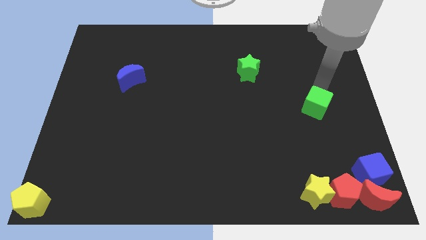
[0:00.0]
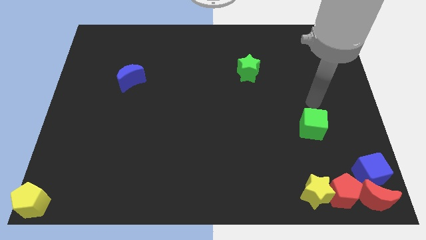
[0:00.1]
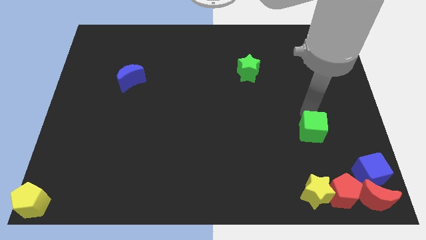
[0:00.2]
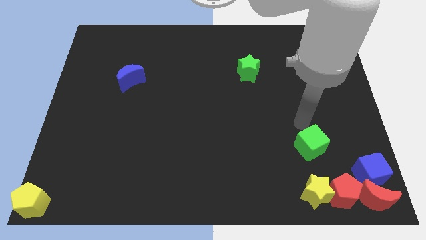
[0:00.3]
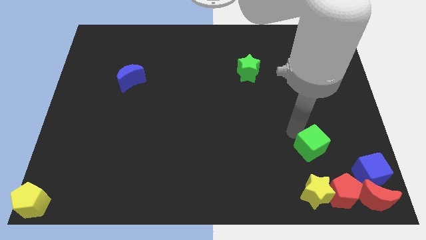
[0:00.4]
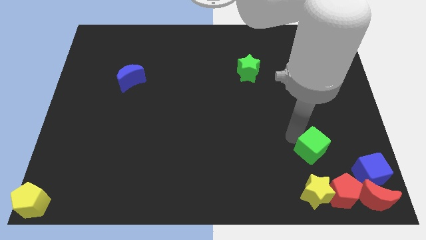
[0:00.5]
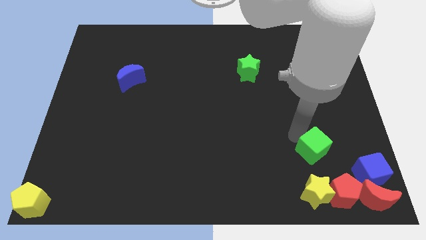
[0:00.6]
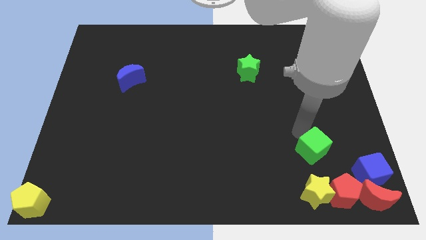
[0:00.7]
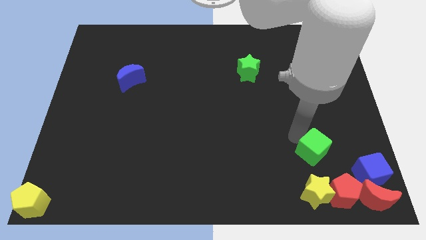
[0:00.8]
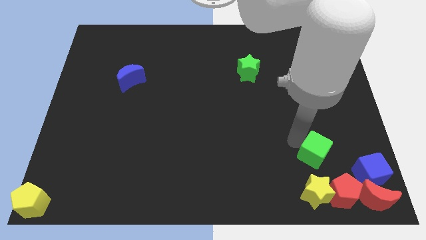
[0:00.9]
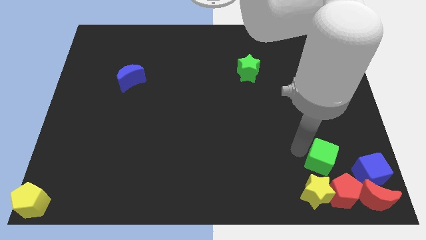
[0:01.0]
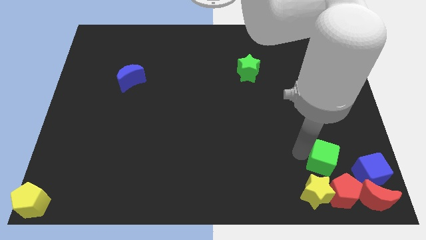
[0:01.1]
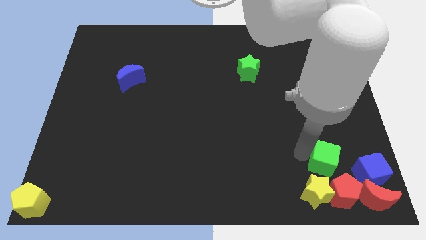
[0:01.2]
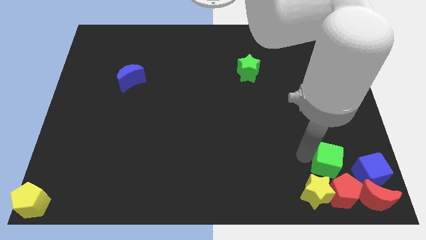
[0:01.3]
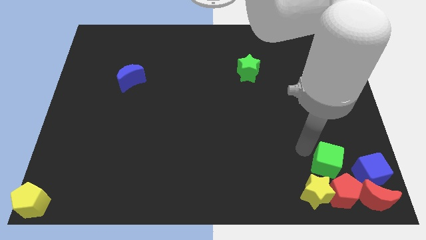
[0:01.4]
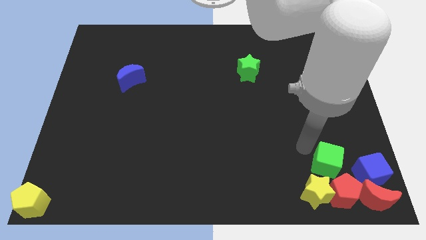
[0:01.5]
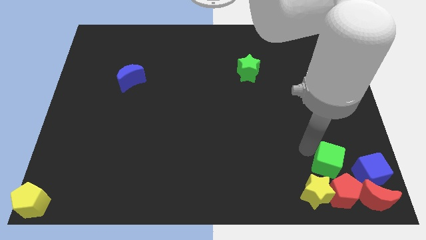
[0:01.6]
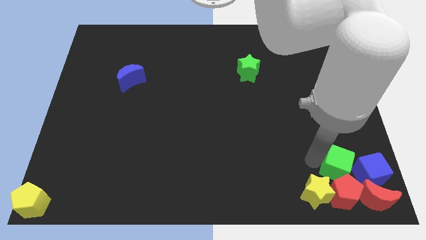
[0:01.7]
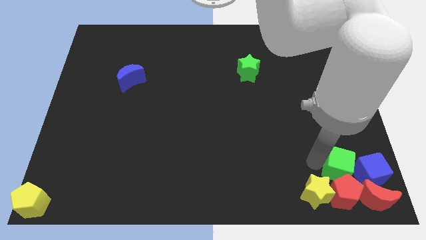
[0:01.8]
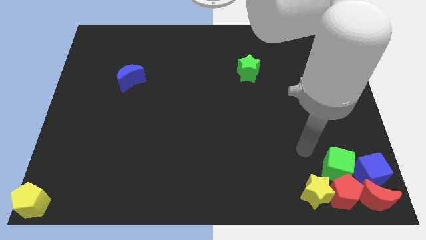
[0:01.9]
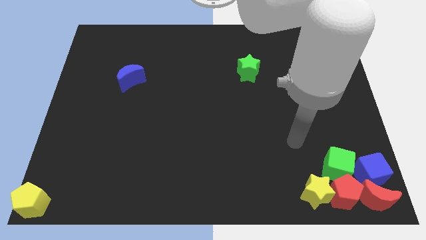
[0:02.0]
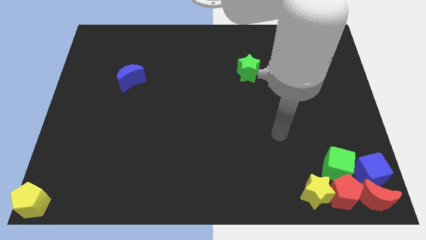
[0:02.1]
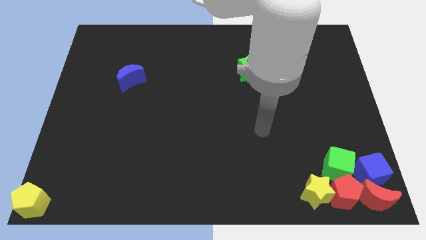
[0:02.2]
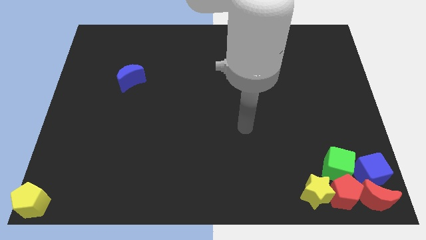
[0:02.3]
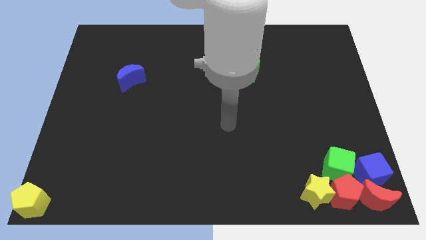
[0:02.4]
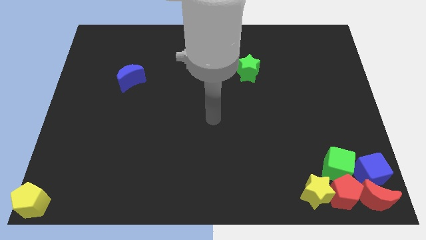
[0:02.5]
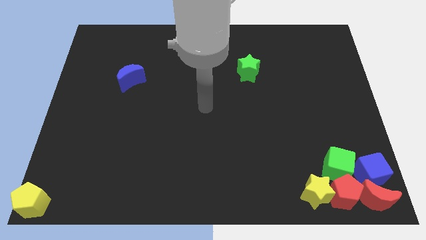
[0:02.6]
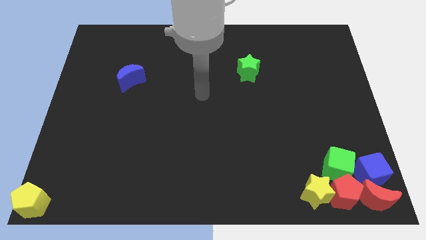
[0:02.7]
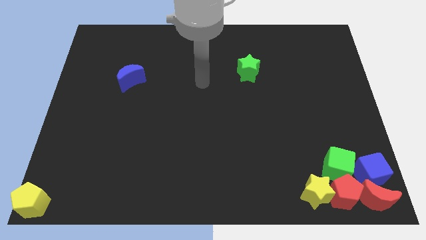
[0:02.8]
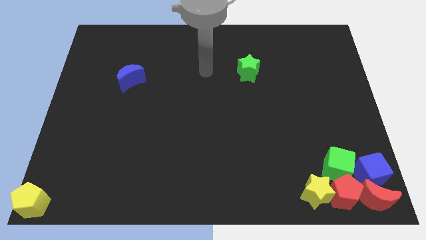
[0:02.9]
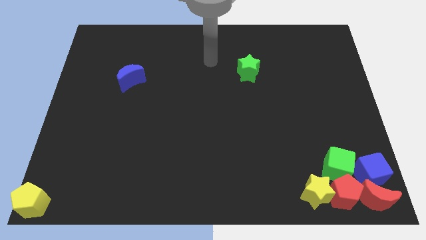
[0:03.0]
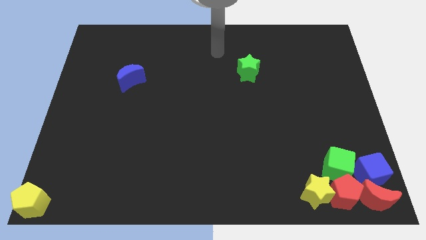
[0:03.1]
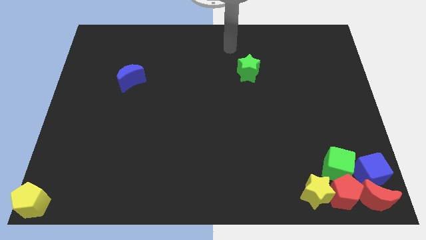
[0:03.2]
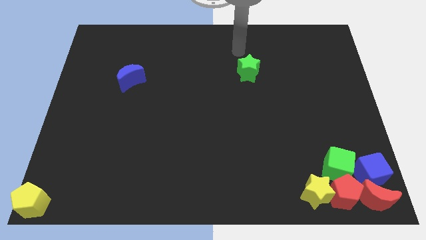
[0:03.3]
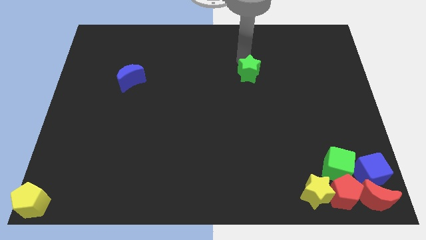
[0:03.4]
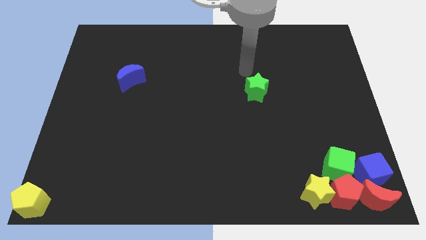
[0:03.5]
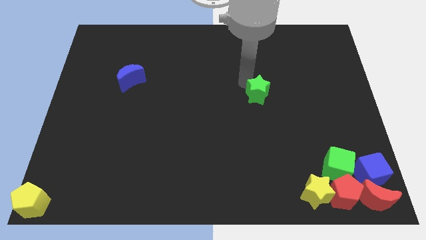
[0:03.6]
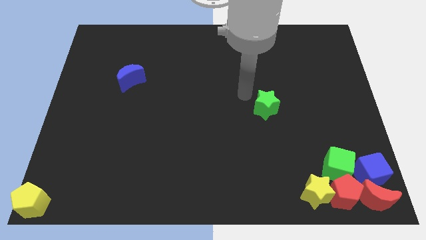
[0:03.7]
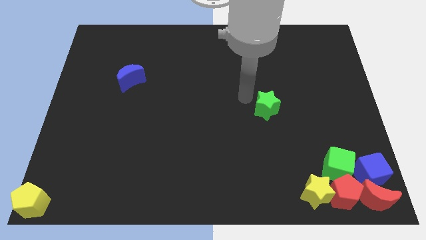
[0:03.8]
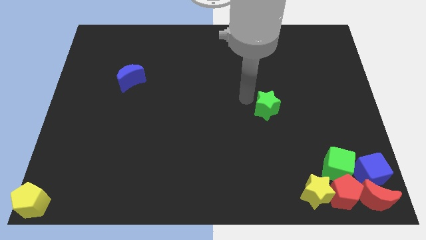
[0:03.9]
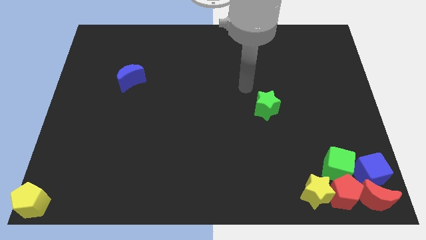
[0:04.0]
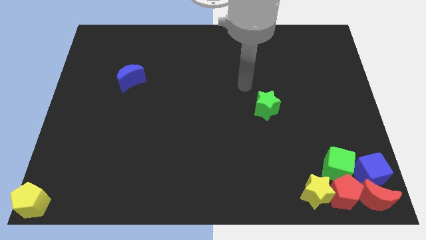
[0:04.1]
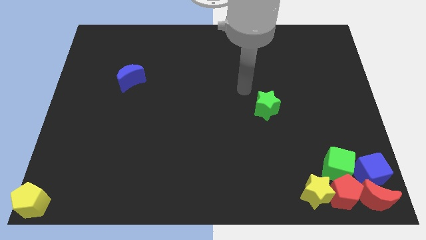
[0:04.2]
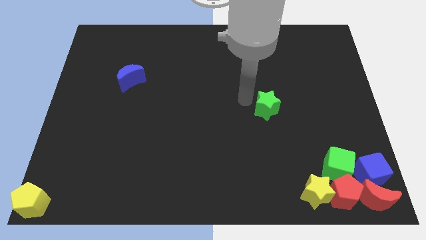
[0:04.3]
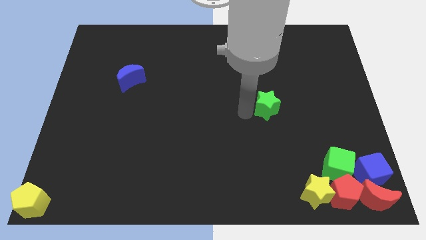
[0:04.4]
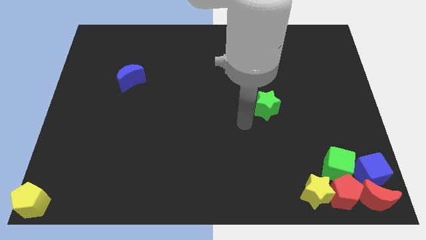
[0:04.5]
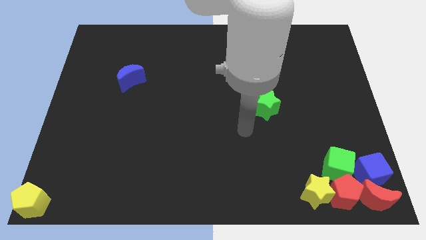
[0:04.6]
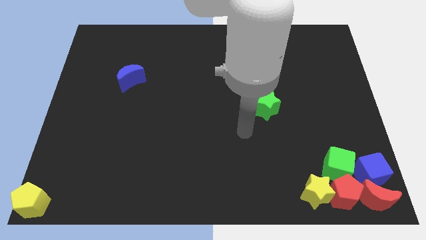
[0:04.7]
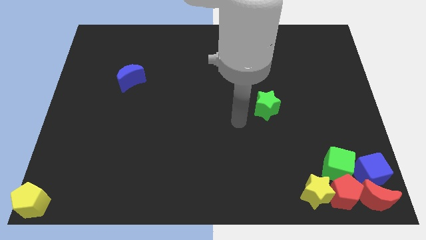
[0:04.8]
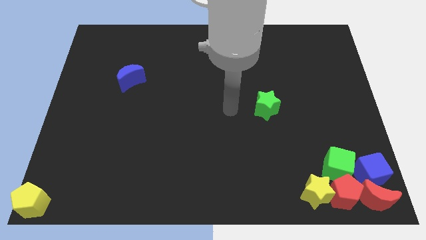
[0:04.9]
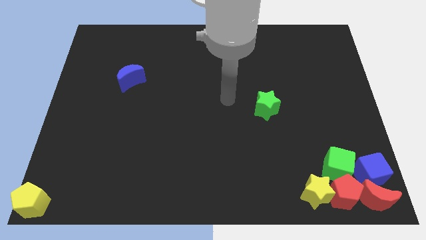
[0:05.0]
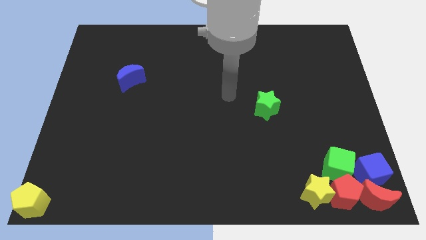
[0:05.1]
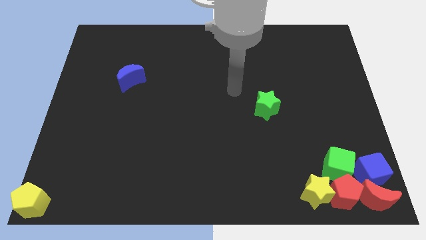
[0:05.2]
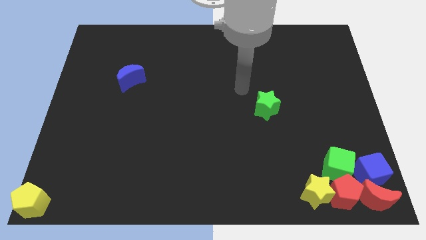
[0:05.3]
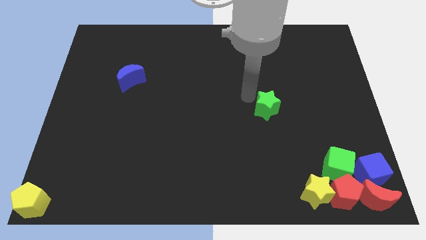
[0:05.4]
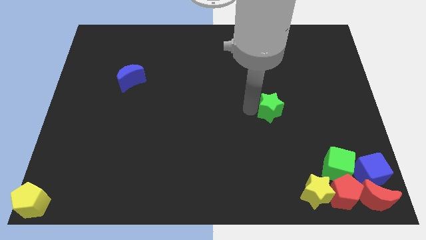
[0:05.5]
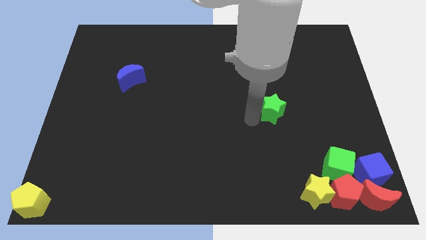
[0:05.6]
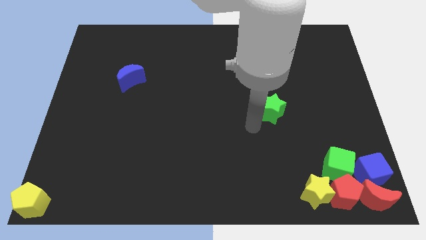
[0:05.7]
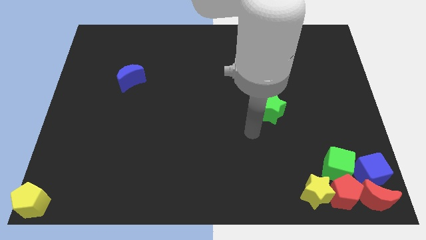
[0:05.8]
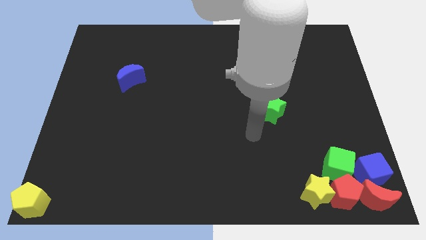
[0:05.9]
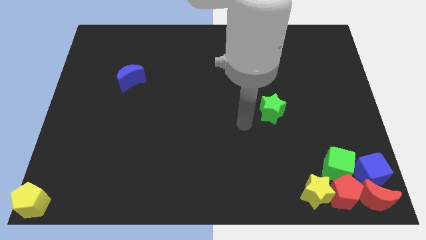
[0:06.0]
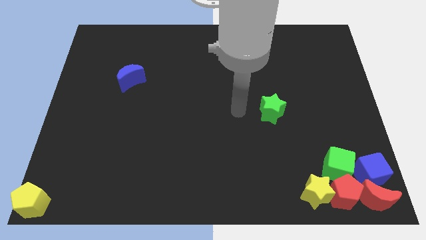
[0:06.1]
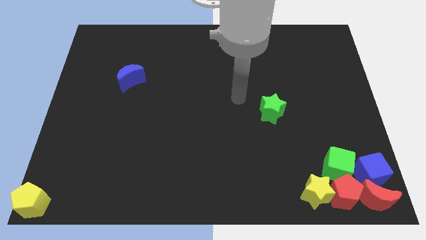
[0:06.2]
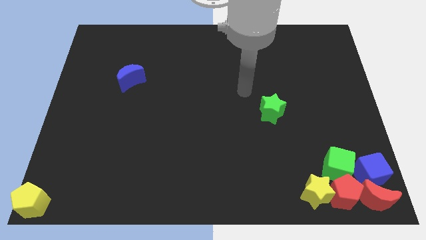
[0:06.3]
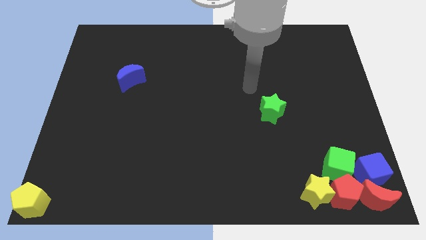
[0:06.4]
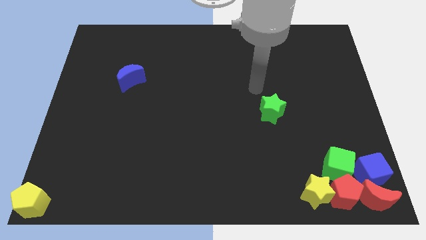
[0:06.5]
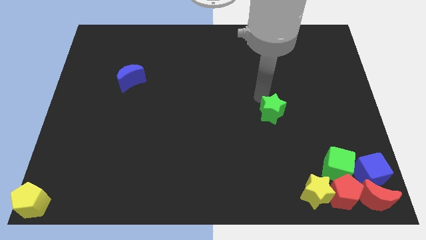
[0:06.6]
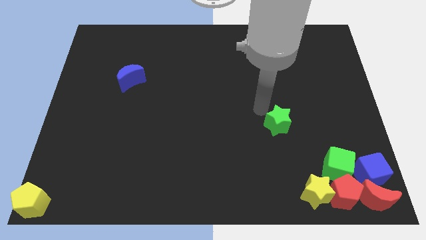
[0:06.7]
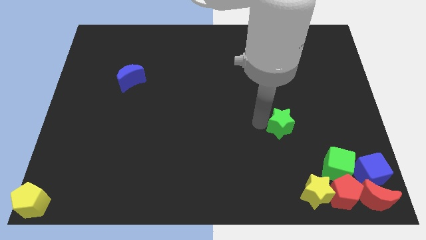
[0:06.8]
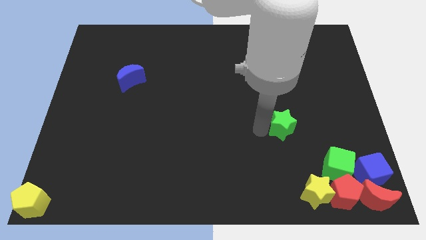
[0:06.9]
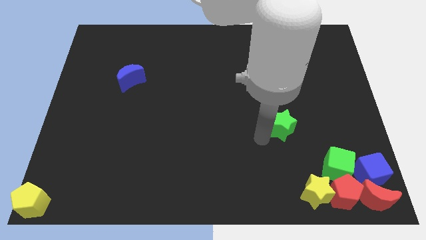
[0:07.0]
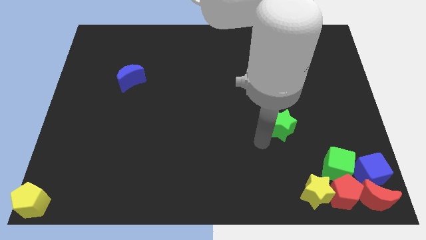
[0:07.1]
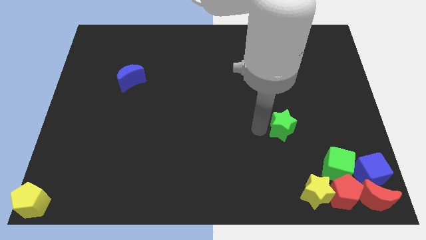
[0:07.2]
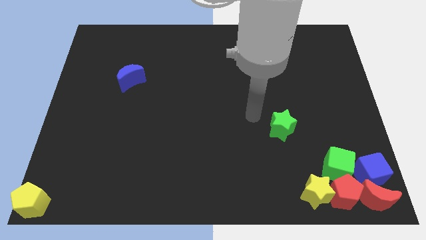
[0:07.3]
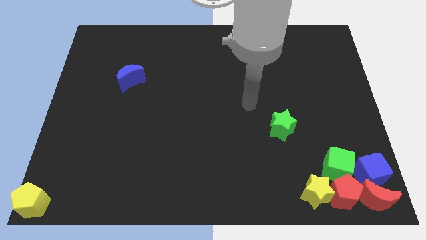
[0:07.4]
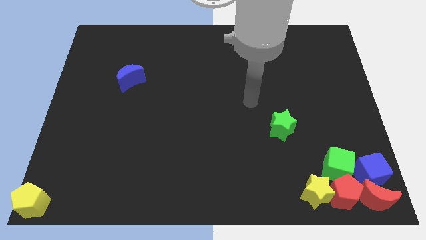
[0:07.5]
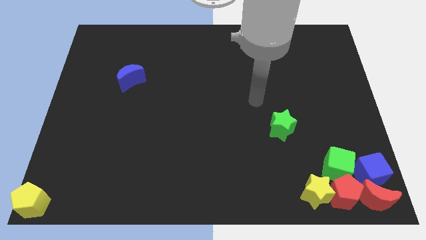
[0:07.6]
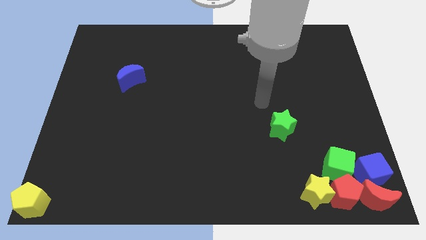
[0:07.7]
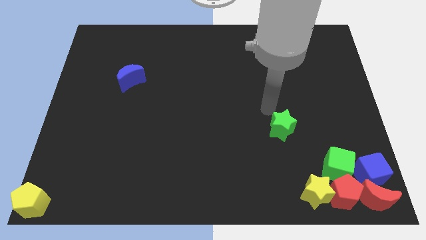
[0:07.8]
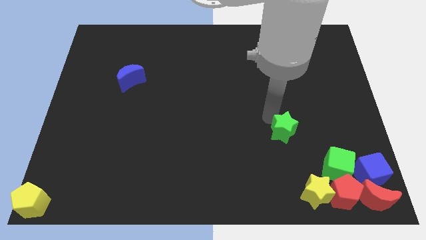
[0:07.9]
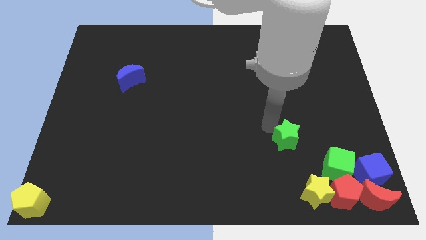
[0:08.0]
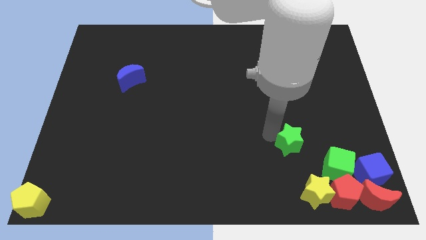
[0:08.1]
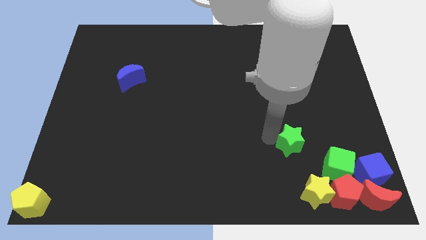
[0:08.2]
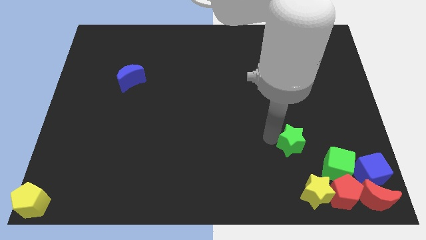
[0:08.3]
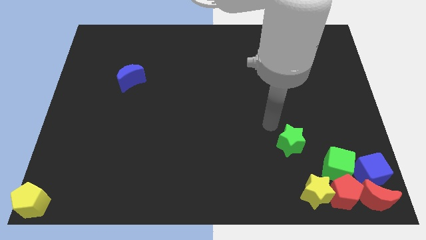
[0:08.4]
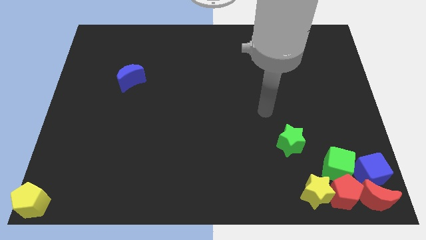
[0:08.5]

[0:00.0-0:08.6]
push the green blocks downwards

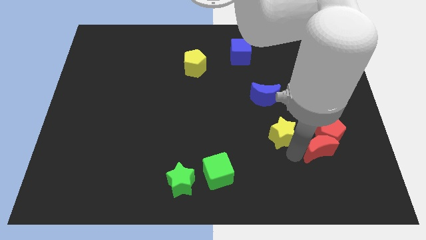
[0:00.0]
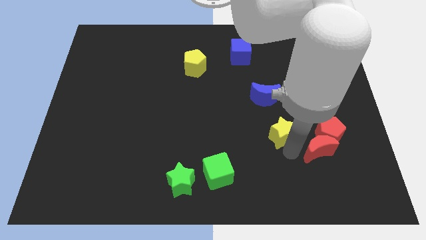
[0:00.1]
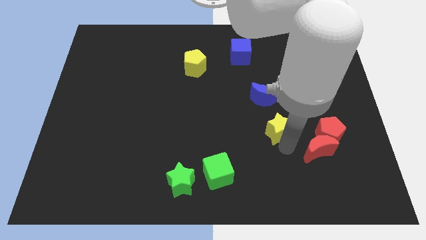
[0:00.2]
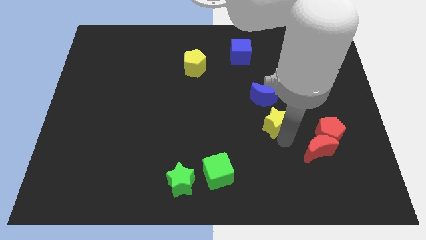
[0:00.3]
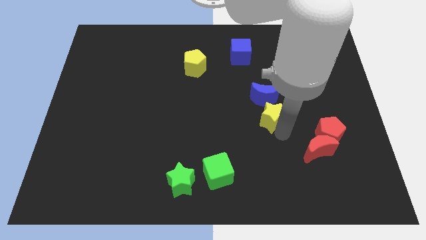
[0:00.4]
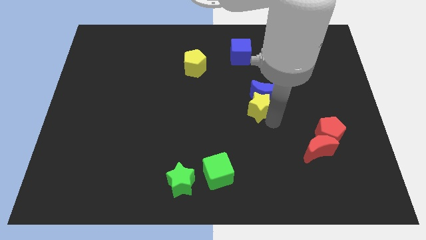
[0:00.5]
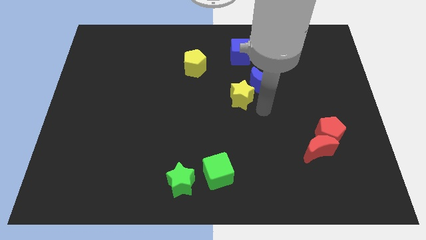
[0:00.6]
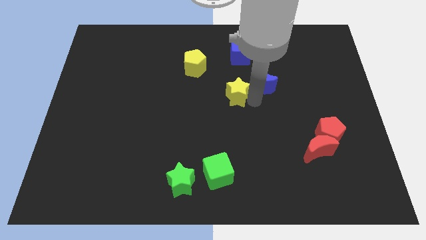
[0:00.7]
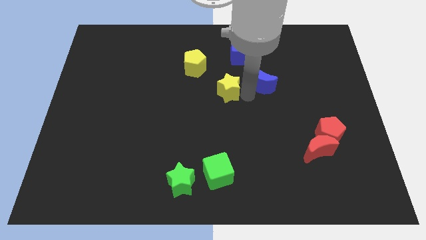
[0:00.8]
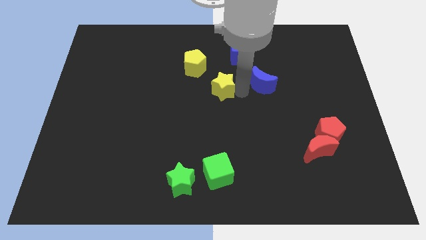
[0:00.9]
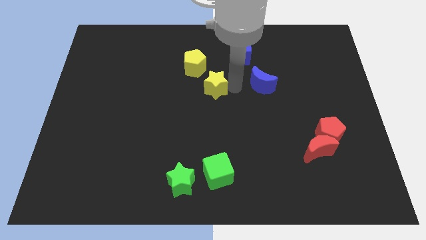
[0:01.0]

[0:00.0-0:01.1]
move the blue moon with the yellow star
